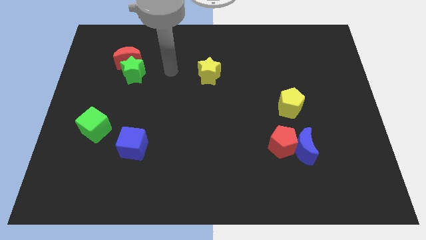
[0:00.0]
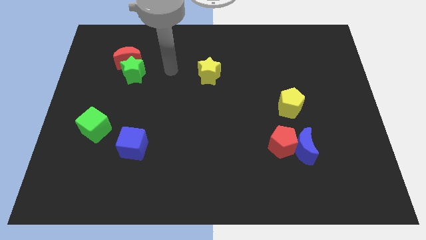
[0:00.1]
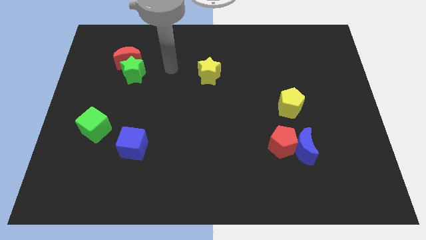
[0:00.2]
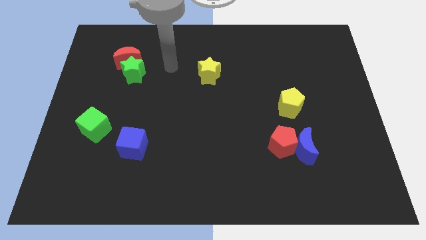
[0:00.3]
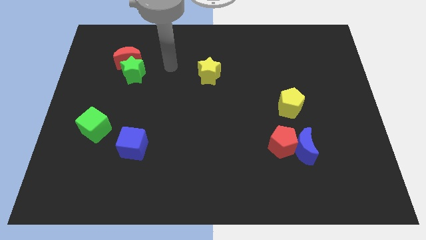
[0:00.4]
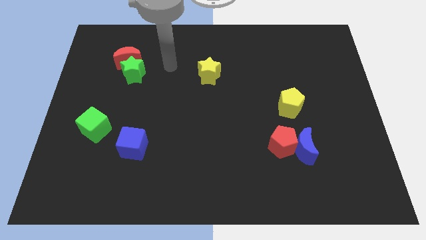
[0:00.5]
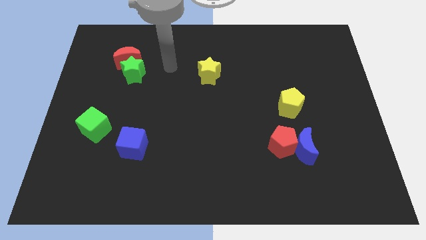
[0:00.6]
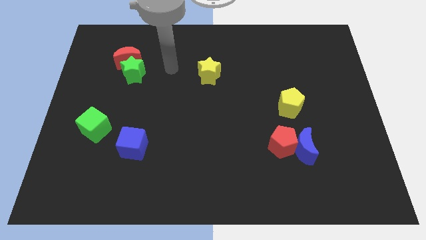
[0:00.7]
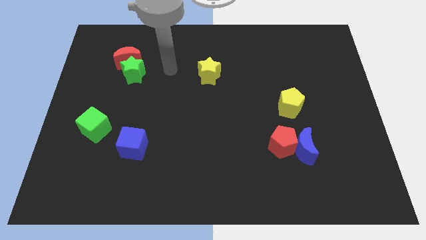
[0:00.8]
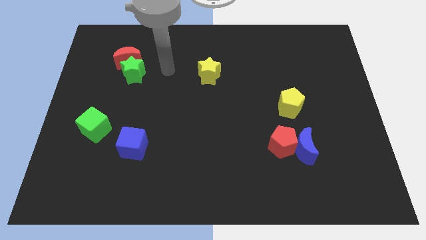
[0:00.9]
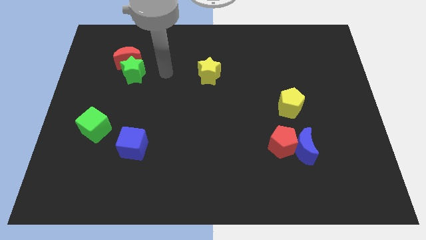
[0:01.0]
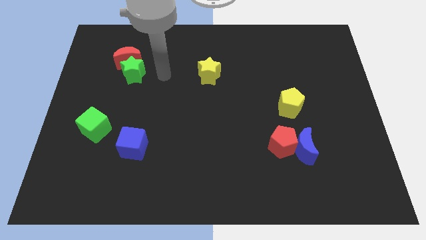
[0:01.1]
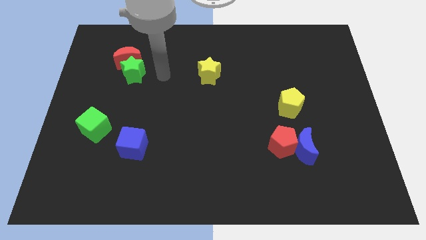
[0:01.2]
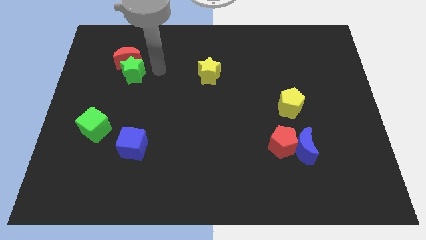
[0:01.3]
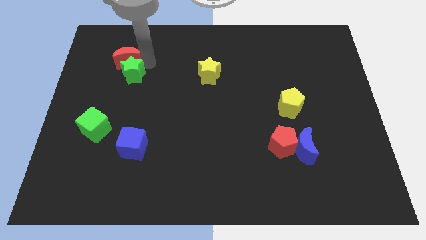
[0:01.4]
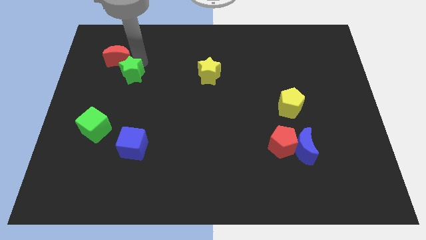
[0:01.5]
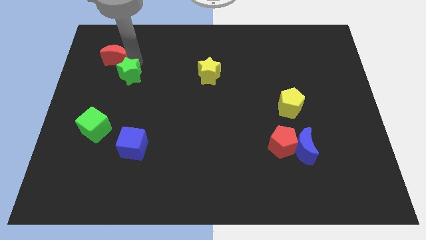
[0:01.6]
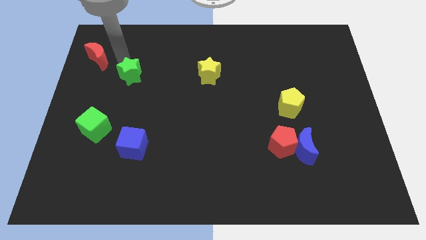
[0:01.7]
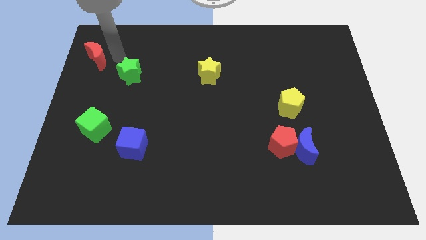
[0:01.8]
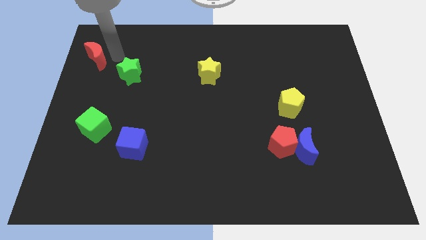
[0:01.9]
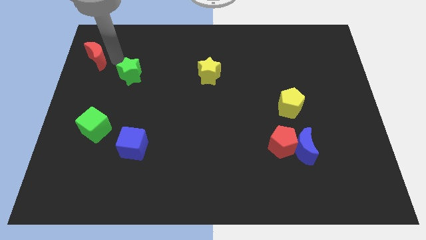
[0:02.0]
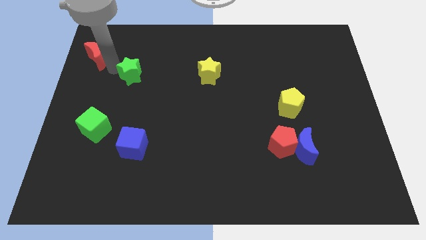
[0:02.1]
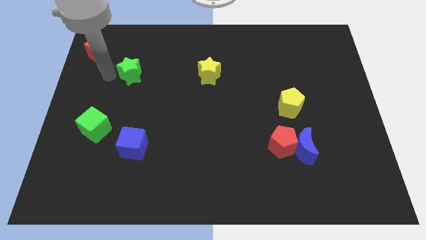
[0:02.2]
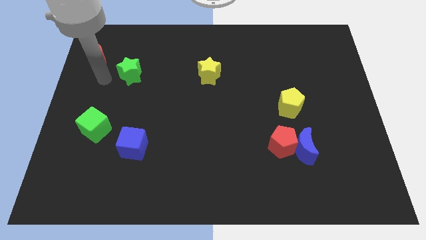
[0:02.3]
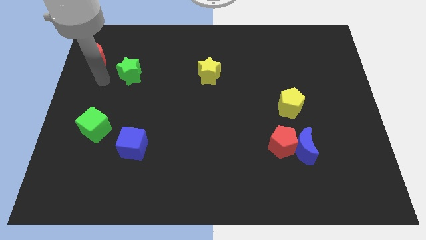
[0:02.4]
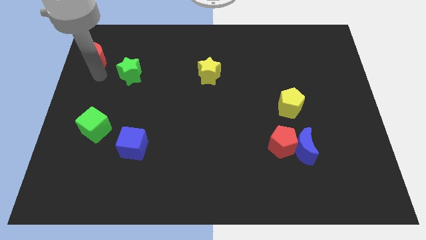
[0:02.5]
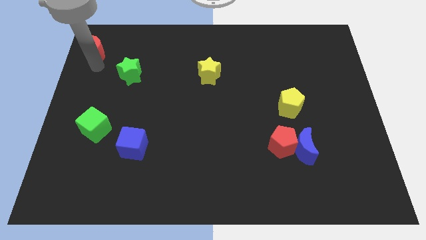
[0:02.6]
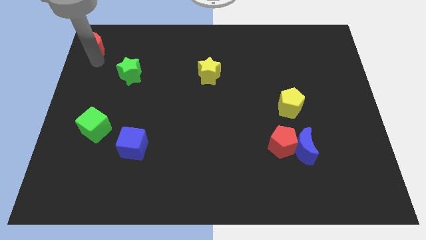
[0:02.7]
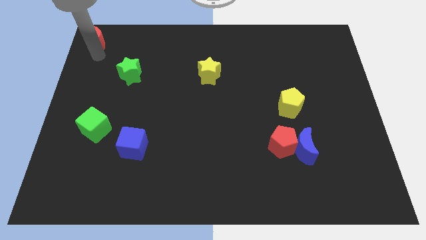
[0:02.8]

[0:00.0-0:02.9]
separate the red crescent from green star

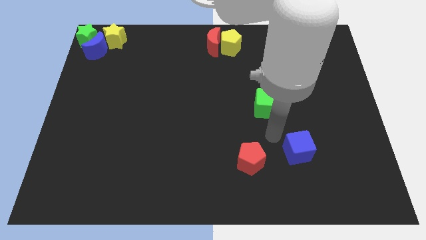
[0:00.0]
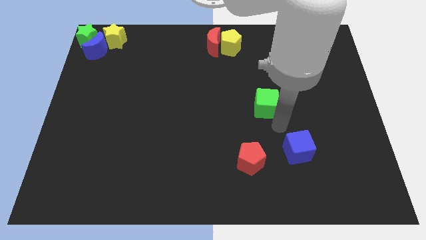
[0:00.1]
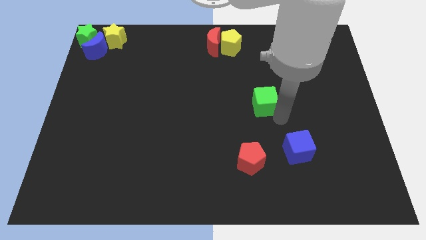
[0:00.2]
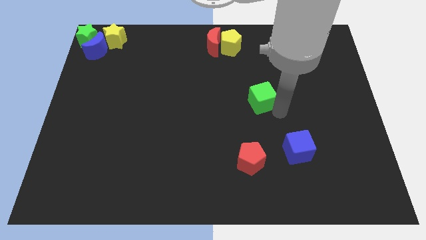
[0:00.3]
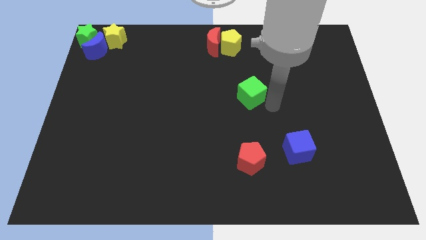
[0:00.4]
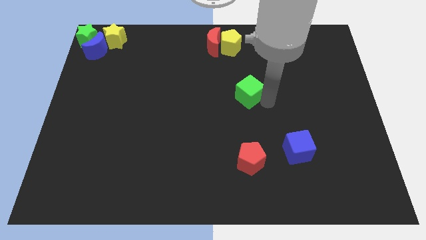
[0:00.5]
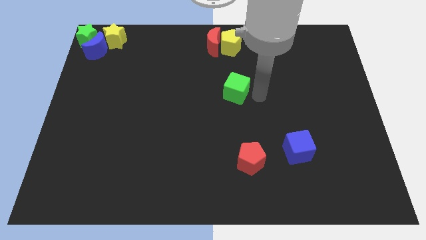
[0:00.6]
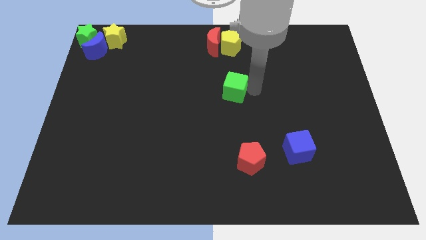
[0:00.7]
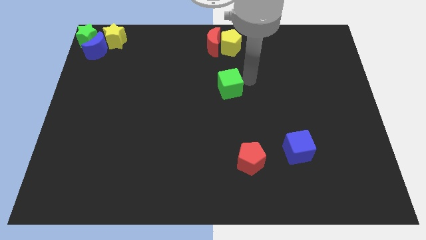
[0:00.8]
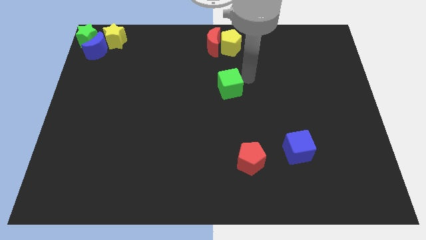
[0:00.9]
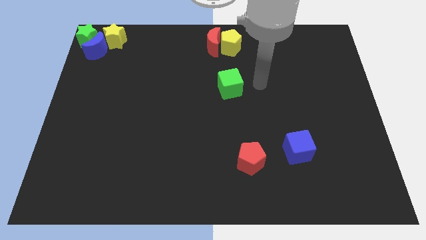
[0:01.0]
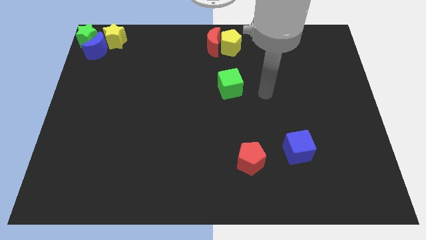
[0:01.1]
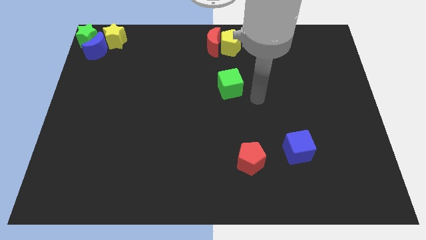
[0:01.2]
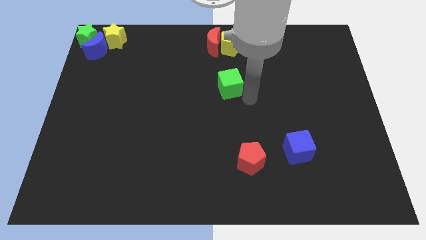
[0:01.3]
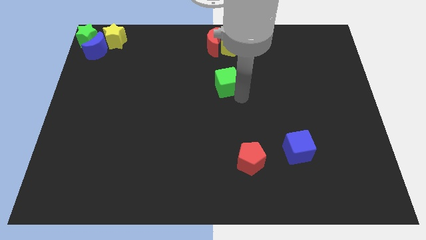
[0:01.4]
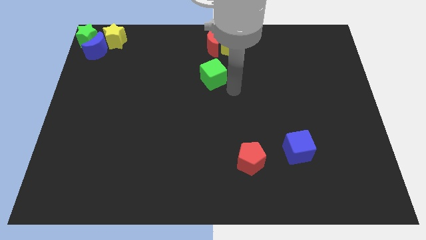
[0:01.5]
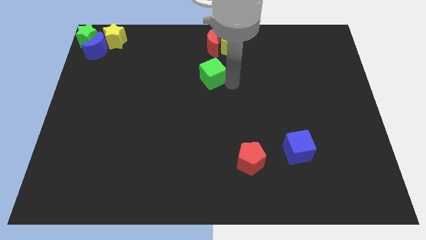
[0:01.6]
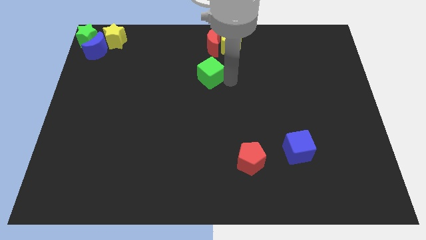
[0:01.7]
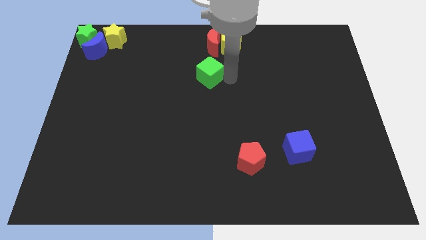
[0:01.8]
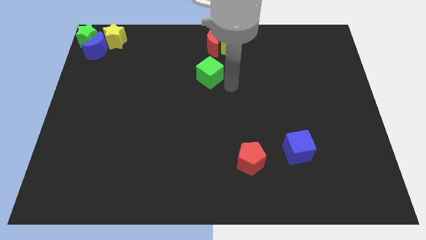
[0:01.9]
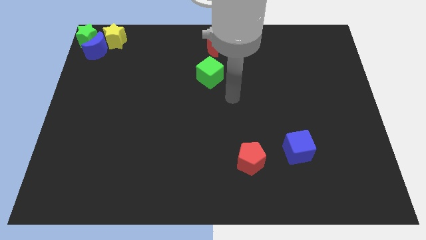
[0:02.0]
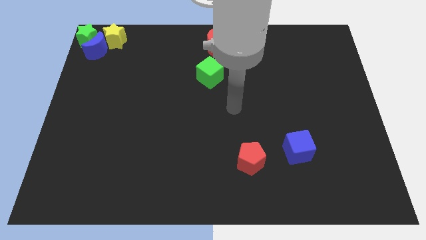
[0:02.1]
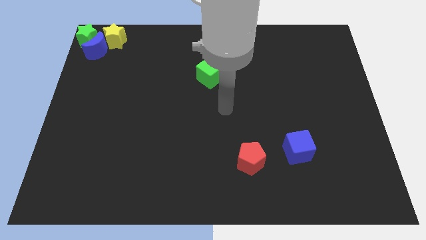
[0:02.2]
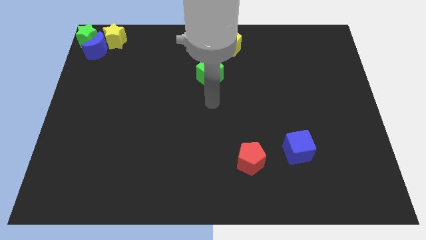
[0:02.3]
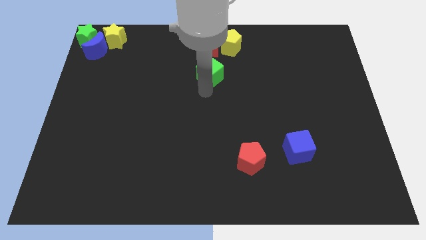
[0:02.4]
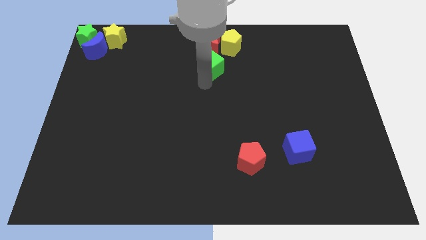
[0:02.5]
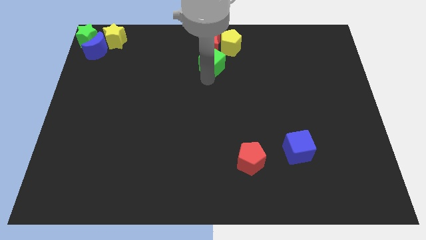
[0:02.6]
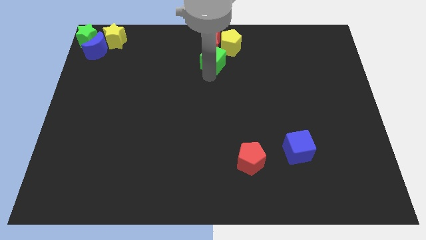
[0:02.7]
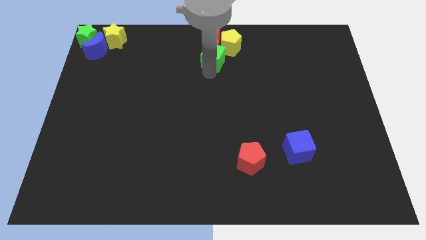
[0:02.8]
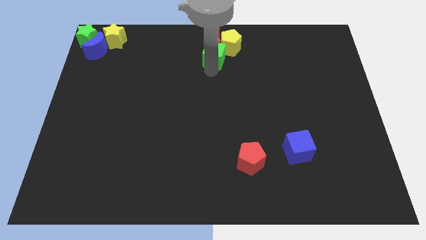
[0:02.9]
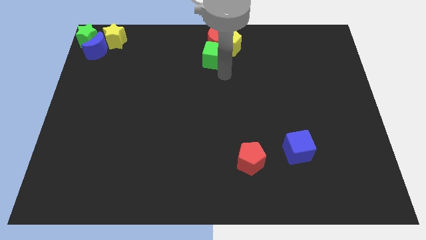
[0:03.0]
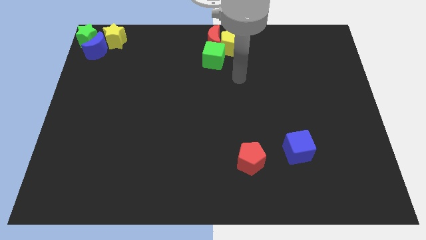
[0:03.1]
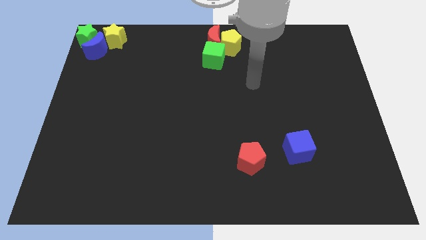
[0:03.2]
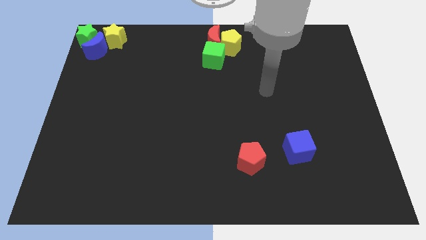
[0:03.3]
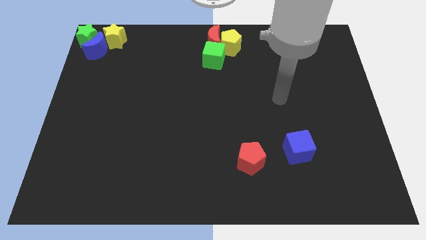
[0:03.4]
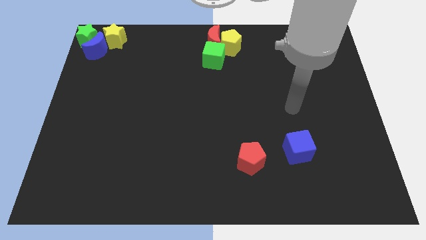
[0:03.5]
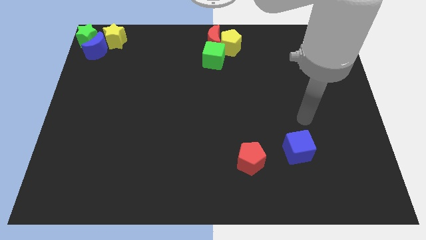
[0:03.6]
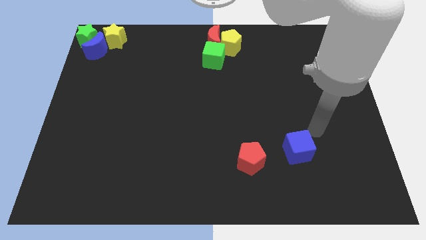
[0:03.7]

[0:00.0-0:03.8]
place the green cube below the red moon and yellow pentagon

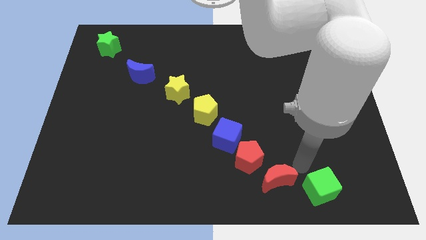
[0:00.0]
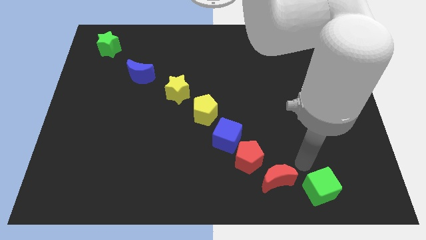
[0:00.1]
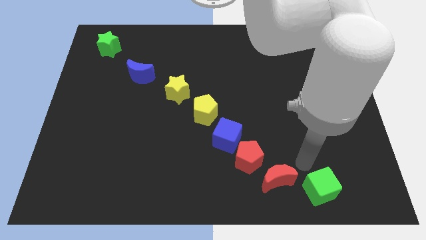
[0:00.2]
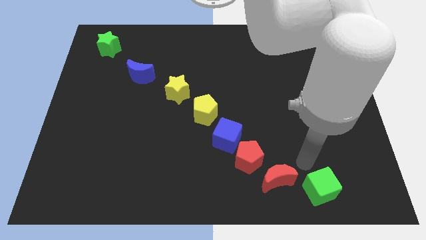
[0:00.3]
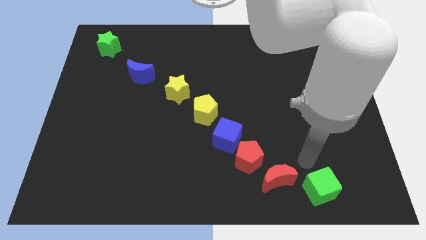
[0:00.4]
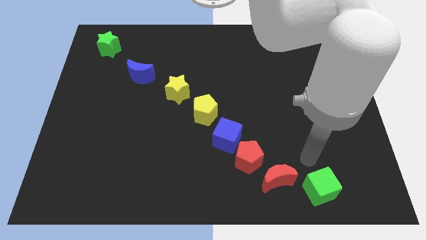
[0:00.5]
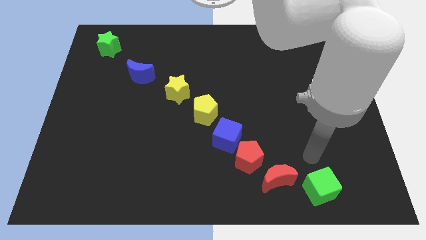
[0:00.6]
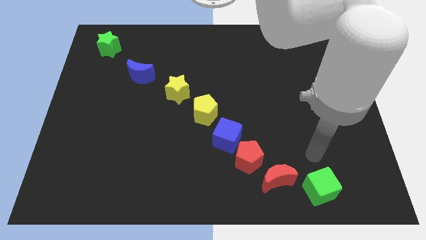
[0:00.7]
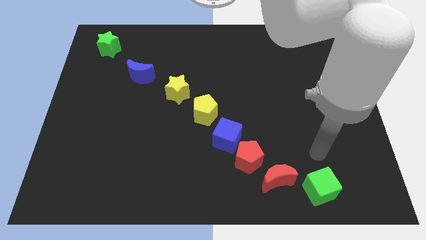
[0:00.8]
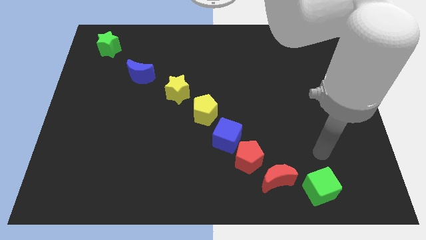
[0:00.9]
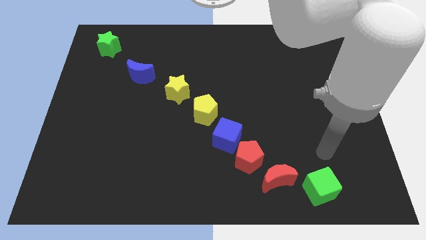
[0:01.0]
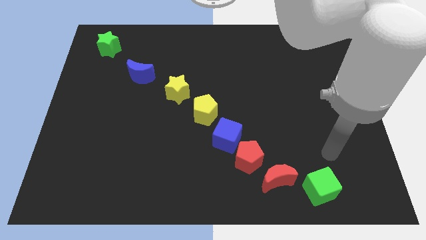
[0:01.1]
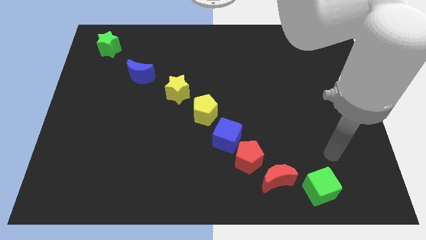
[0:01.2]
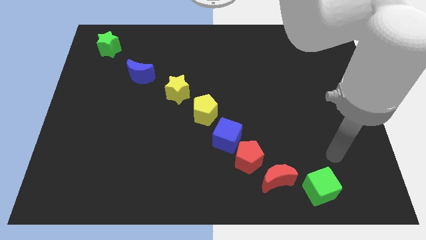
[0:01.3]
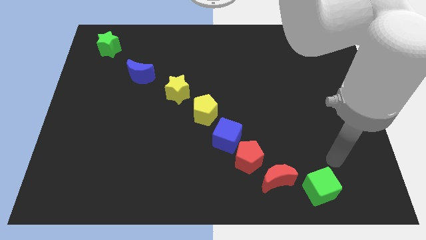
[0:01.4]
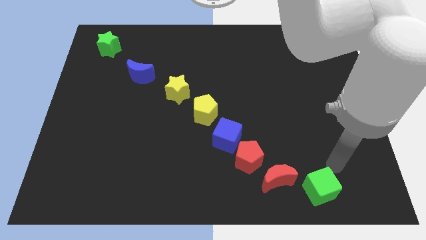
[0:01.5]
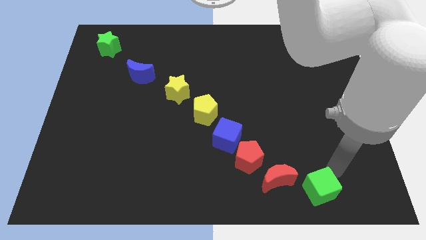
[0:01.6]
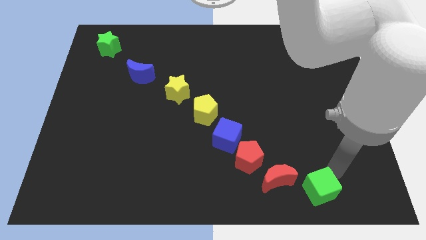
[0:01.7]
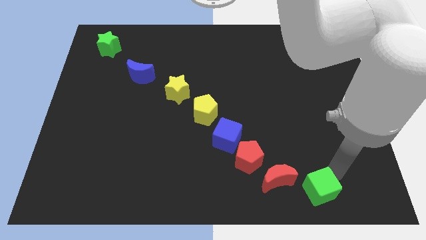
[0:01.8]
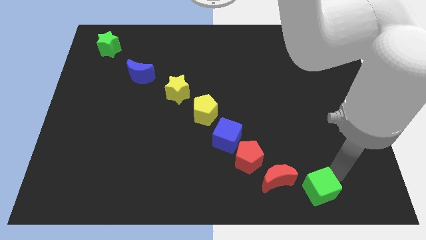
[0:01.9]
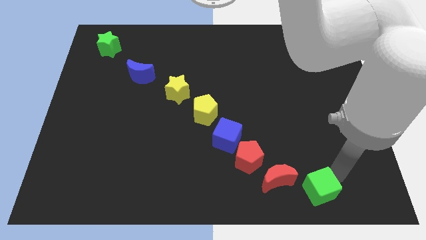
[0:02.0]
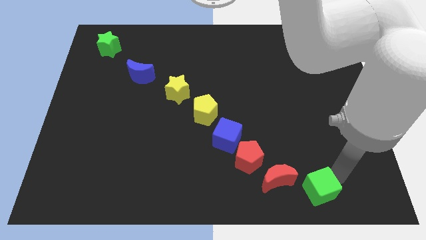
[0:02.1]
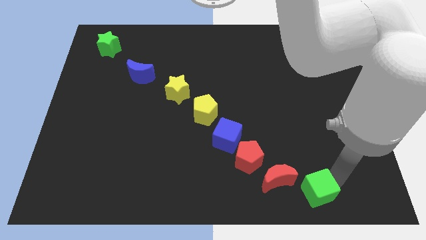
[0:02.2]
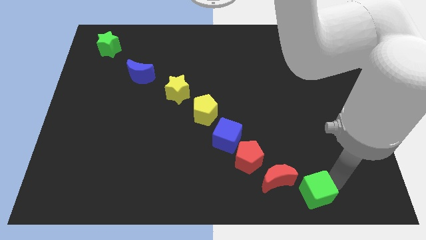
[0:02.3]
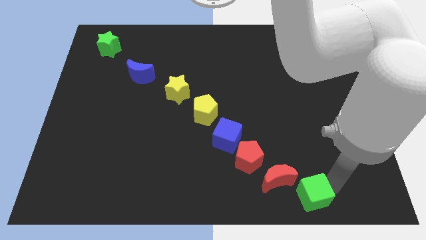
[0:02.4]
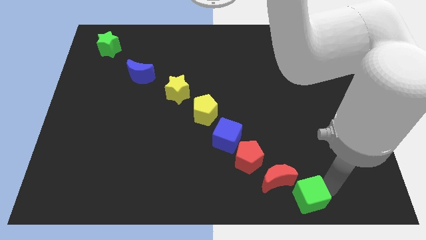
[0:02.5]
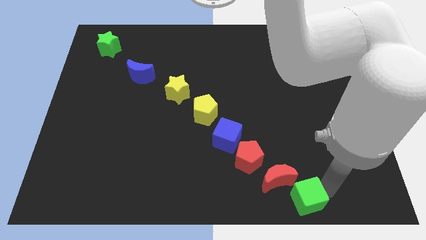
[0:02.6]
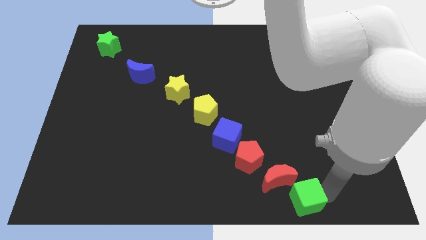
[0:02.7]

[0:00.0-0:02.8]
move the green cube slightly to the bottom of the red moon
